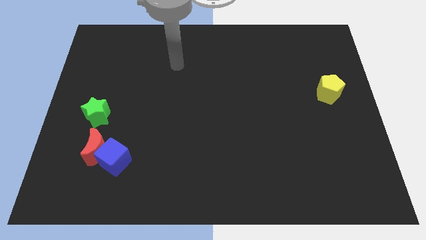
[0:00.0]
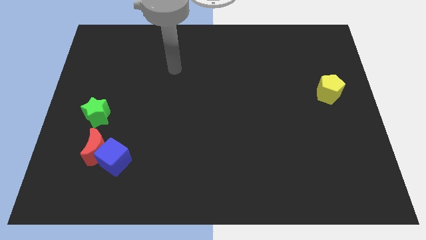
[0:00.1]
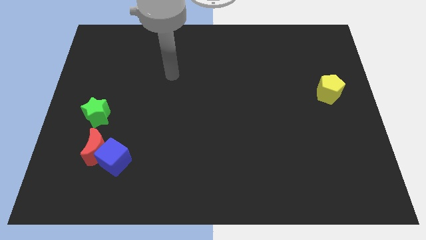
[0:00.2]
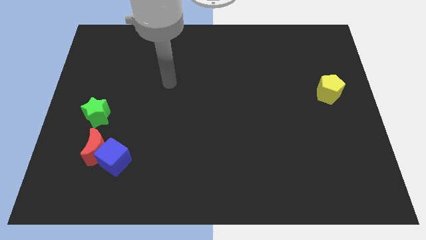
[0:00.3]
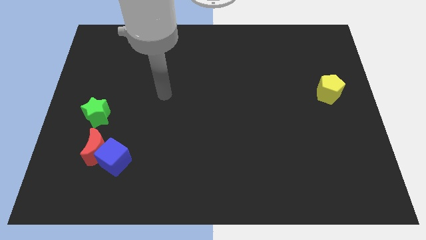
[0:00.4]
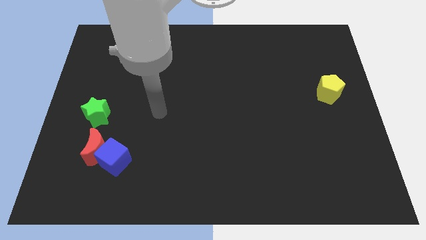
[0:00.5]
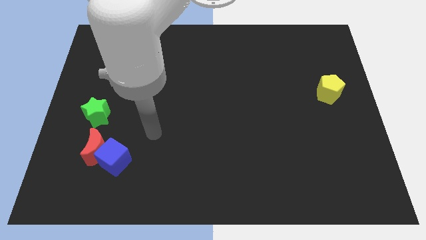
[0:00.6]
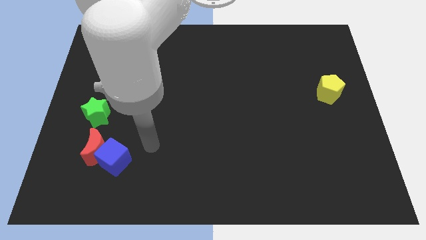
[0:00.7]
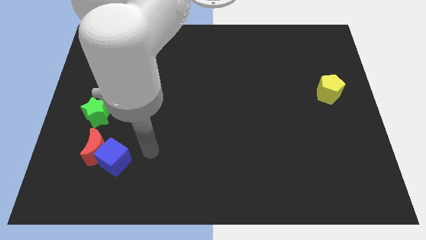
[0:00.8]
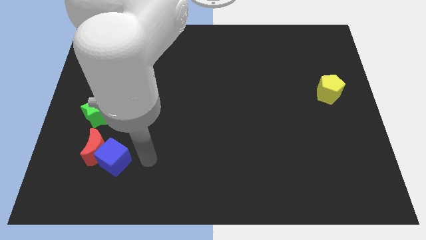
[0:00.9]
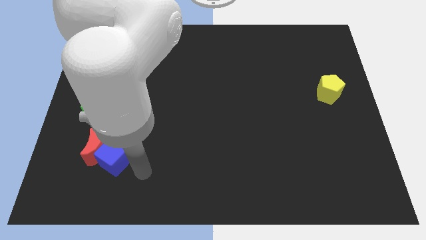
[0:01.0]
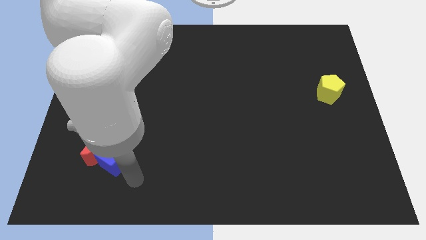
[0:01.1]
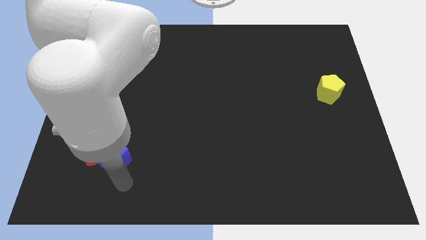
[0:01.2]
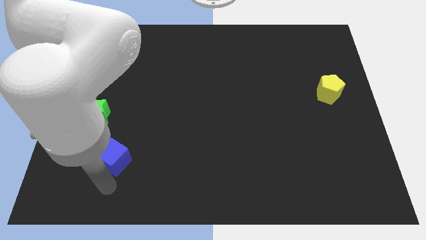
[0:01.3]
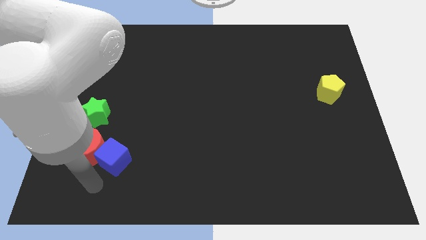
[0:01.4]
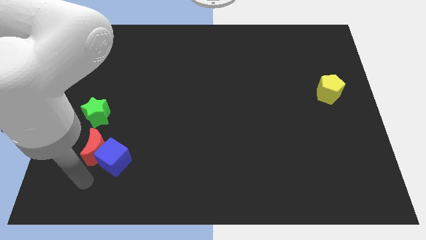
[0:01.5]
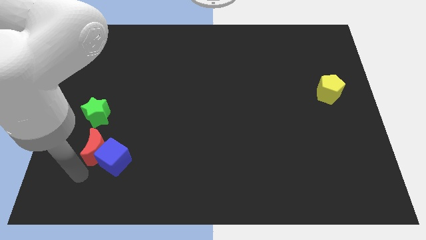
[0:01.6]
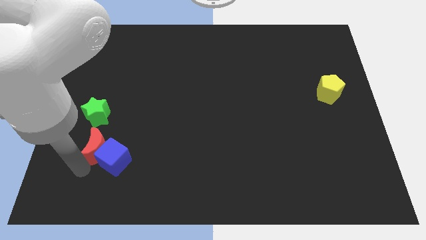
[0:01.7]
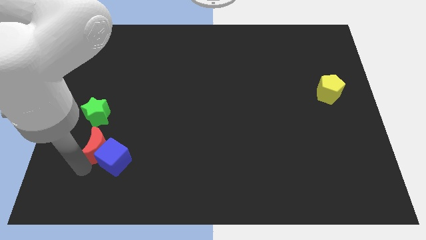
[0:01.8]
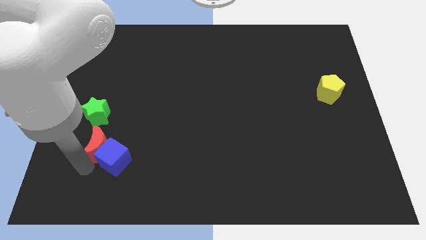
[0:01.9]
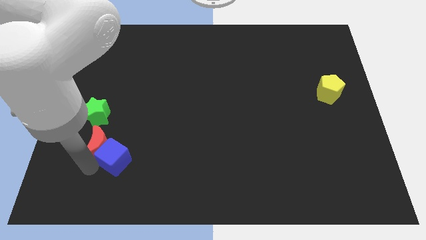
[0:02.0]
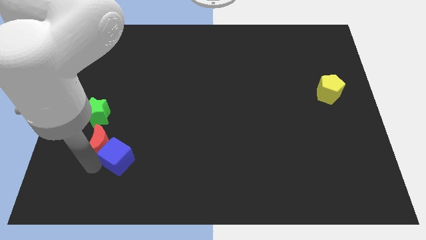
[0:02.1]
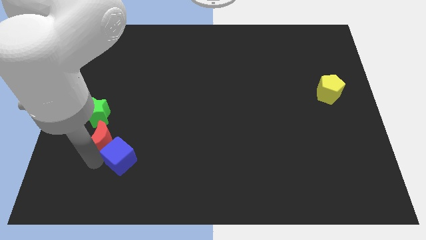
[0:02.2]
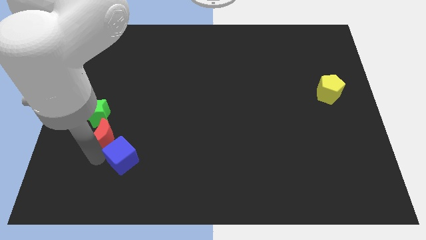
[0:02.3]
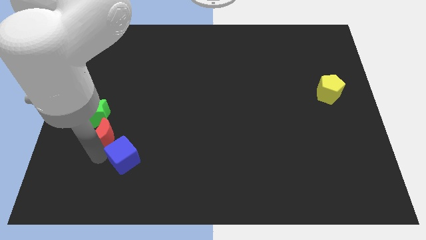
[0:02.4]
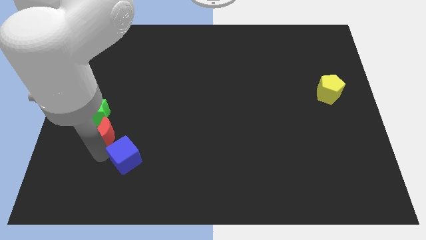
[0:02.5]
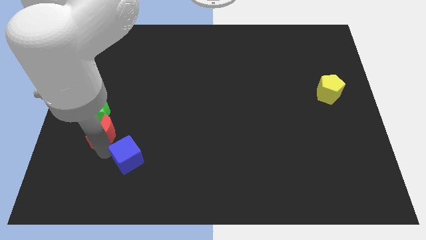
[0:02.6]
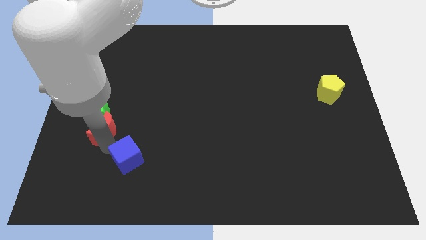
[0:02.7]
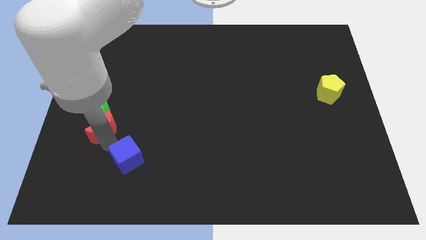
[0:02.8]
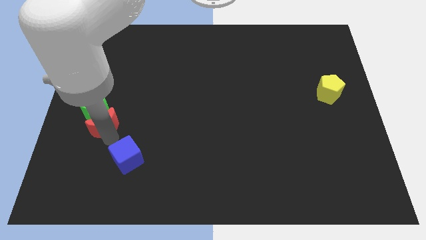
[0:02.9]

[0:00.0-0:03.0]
move the red moon close to the star

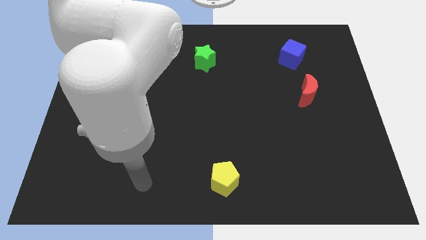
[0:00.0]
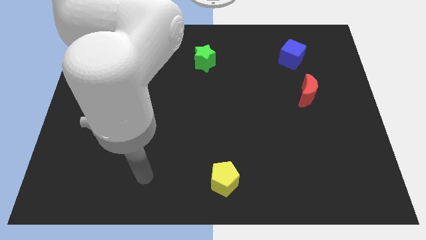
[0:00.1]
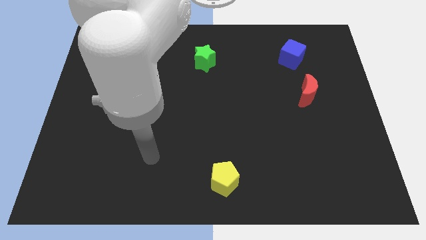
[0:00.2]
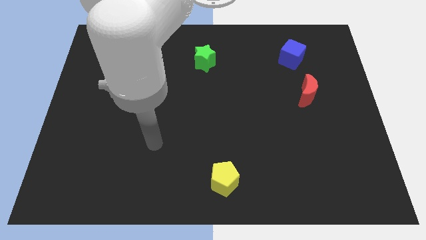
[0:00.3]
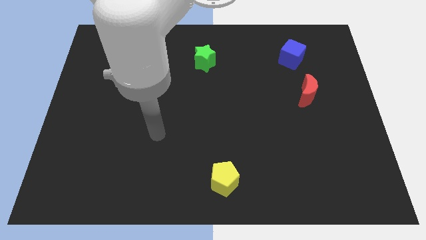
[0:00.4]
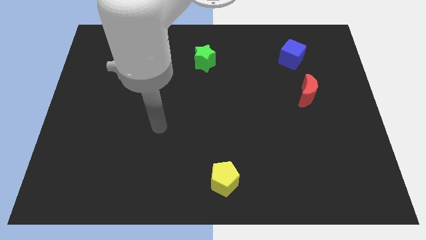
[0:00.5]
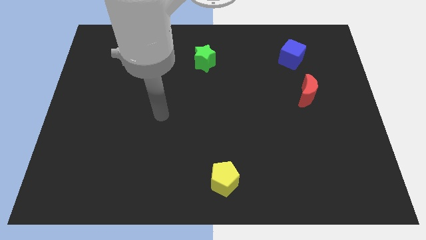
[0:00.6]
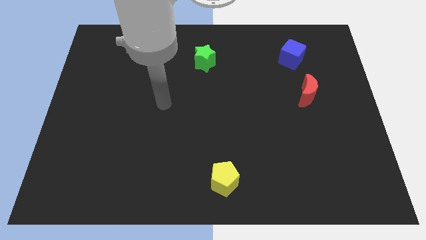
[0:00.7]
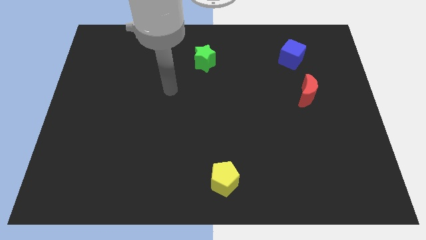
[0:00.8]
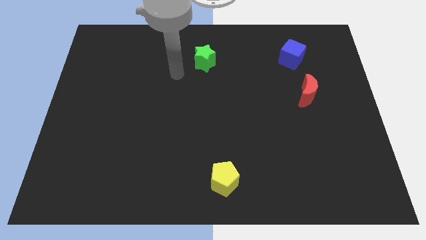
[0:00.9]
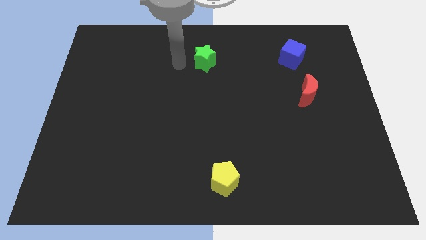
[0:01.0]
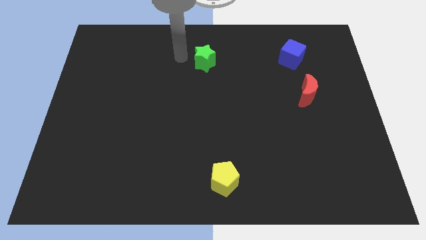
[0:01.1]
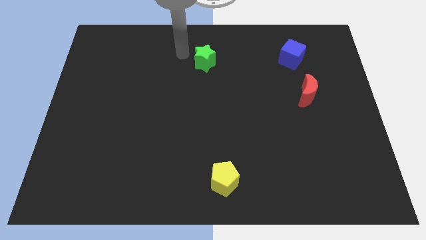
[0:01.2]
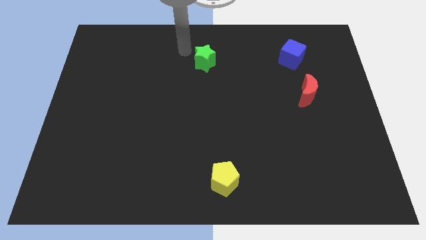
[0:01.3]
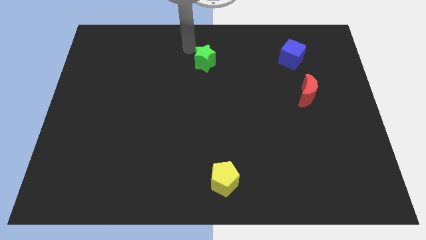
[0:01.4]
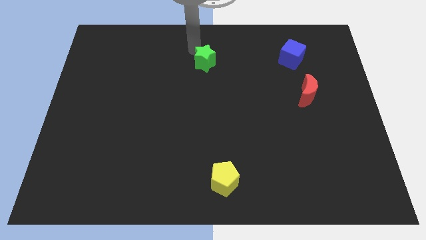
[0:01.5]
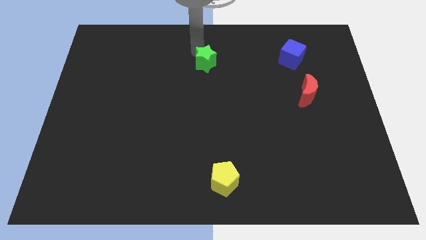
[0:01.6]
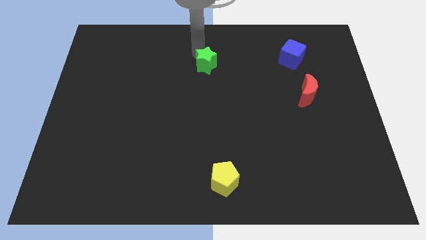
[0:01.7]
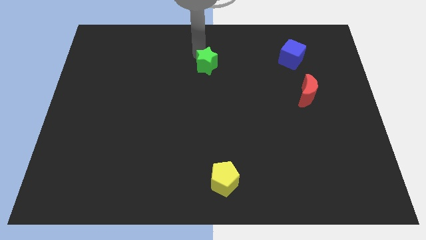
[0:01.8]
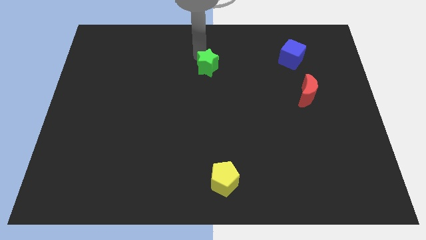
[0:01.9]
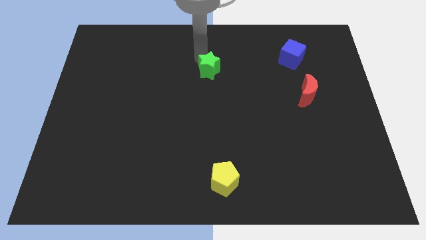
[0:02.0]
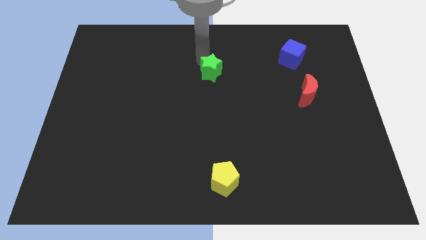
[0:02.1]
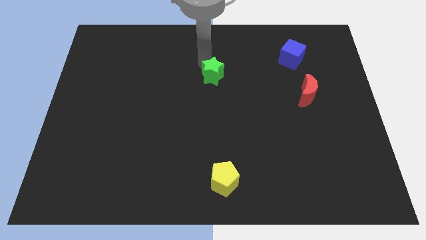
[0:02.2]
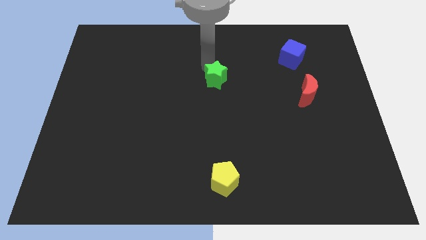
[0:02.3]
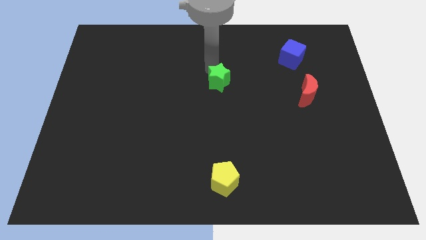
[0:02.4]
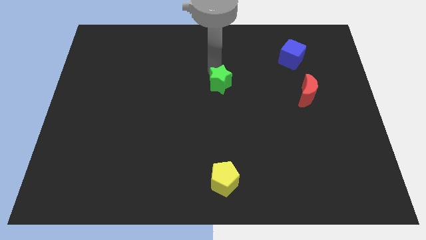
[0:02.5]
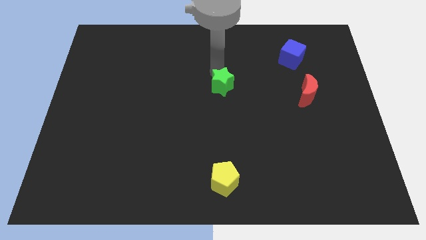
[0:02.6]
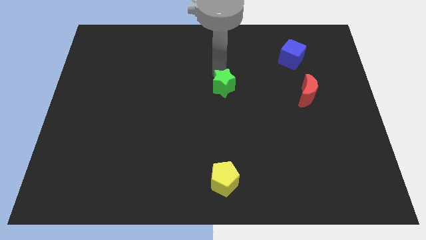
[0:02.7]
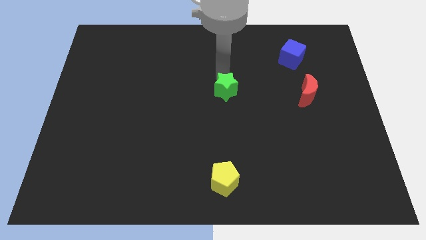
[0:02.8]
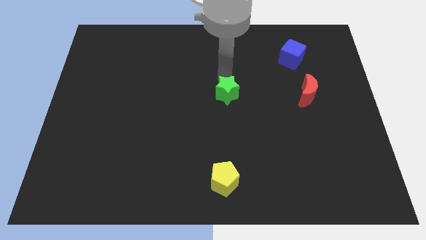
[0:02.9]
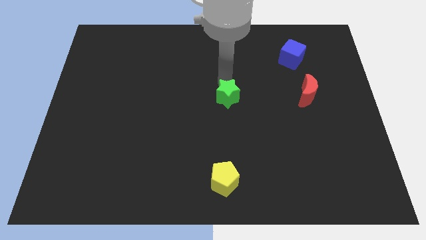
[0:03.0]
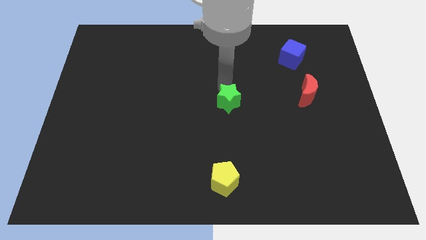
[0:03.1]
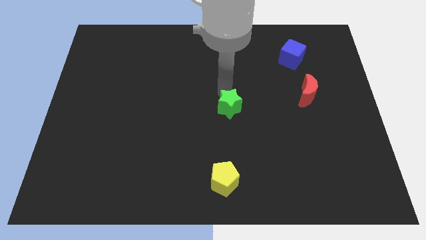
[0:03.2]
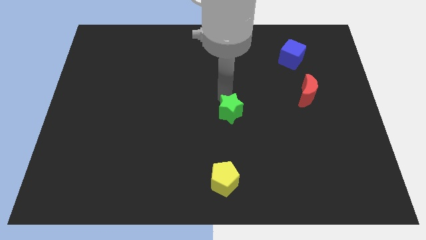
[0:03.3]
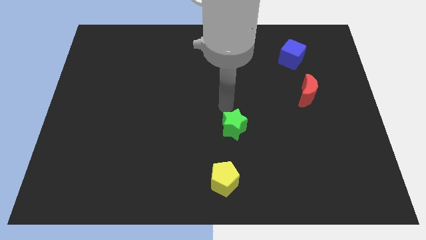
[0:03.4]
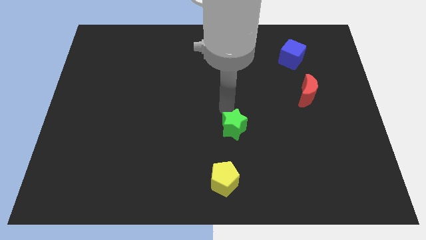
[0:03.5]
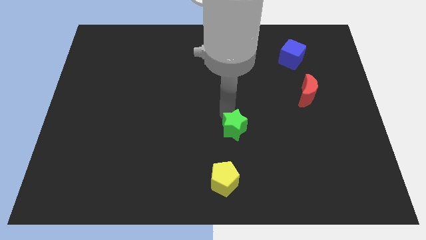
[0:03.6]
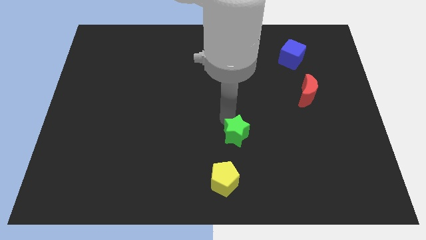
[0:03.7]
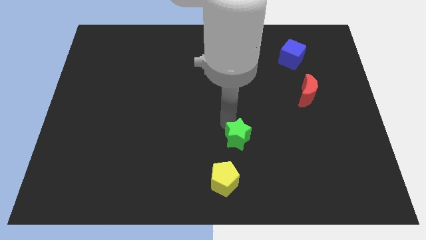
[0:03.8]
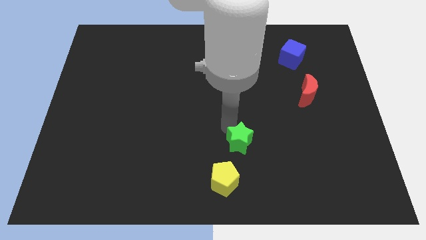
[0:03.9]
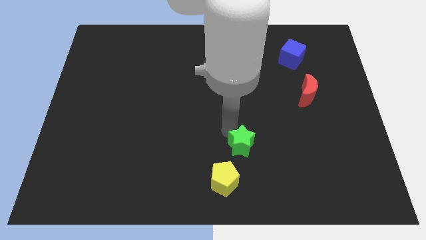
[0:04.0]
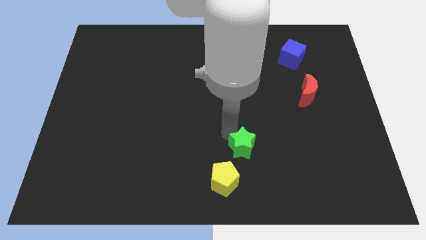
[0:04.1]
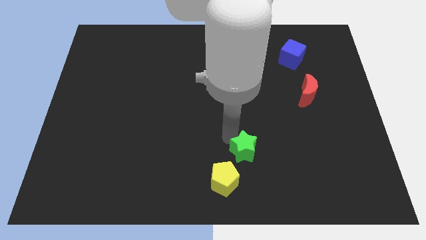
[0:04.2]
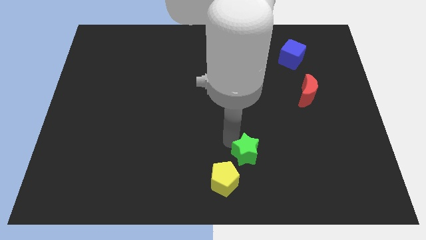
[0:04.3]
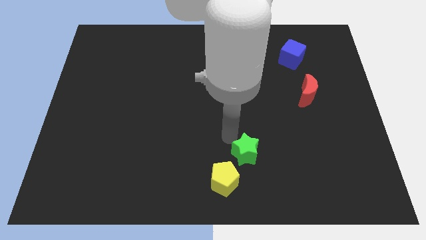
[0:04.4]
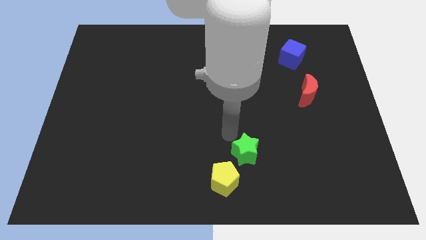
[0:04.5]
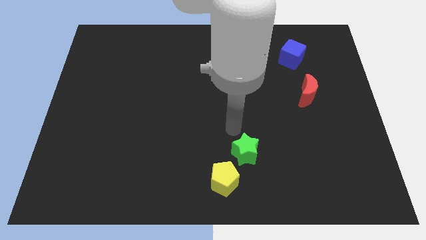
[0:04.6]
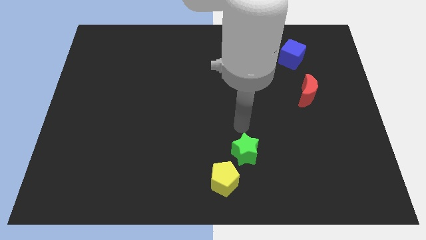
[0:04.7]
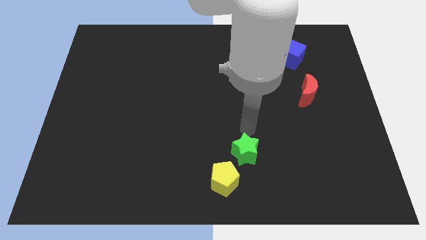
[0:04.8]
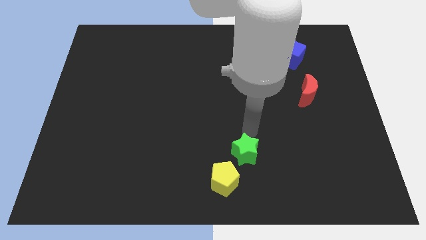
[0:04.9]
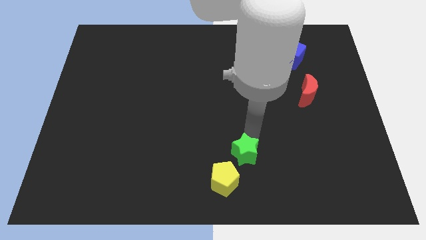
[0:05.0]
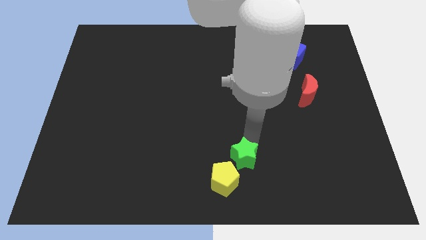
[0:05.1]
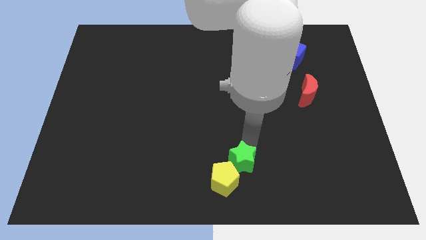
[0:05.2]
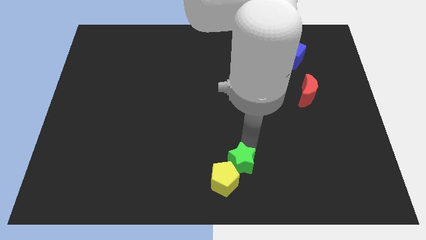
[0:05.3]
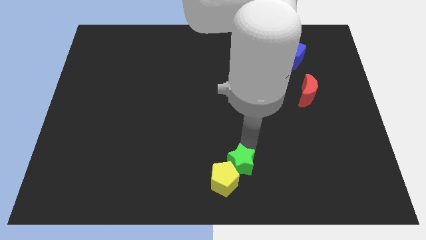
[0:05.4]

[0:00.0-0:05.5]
move the green star towards the yellow pentagon
